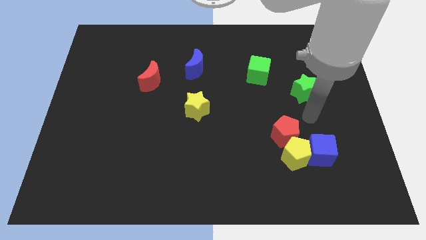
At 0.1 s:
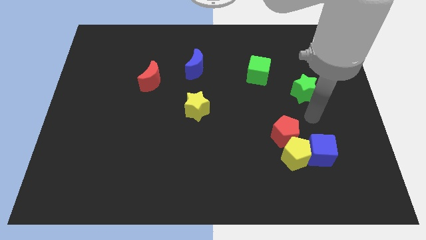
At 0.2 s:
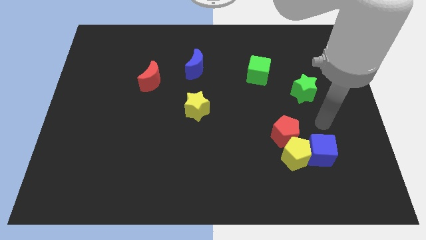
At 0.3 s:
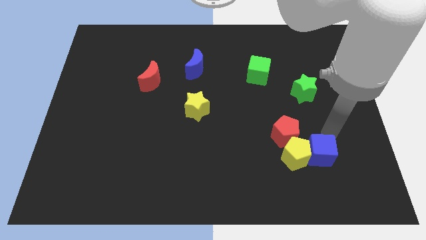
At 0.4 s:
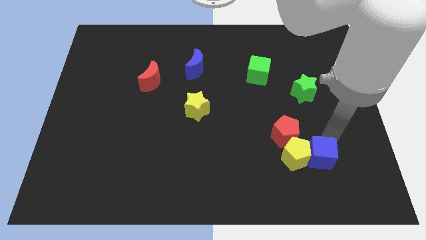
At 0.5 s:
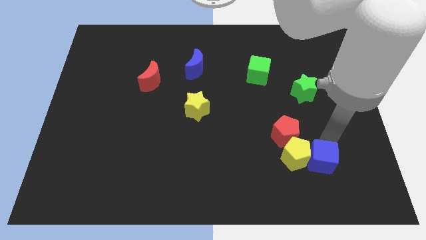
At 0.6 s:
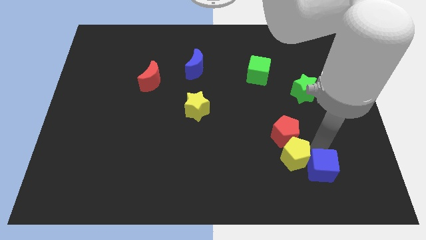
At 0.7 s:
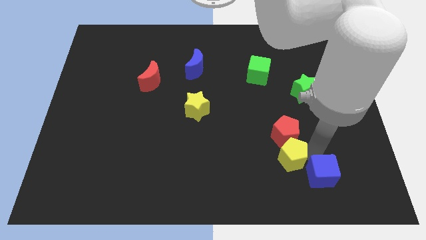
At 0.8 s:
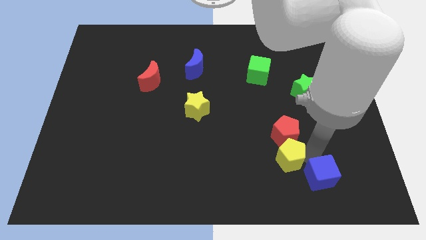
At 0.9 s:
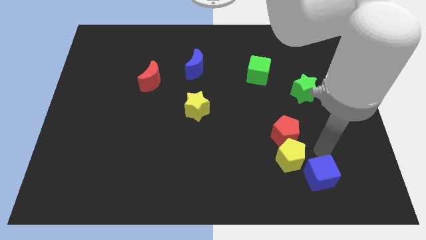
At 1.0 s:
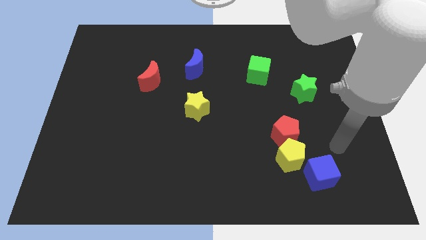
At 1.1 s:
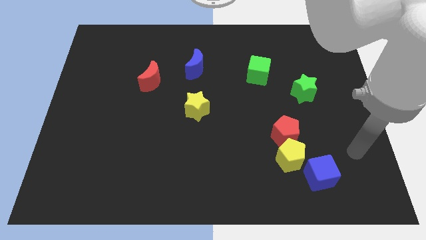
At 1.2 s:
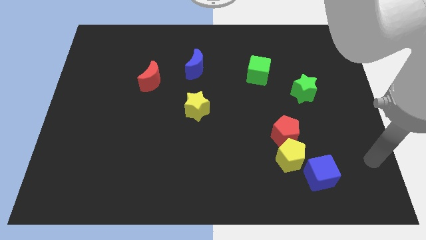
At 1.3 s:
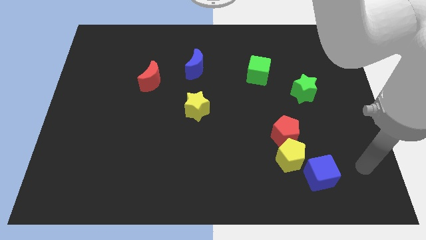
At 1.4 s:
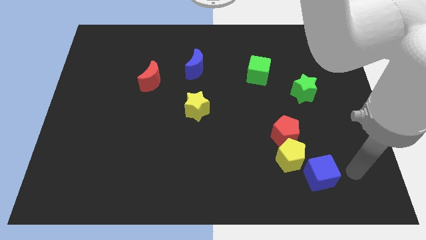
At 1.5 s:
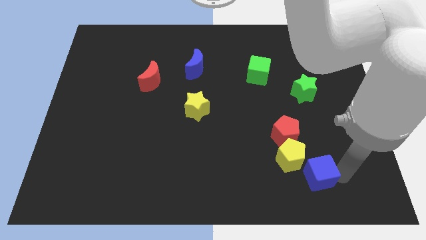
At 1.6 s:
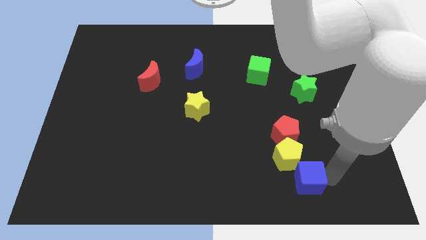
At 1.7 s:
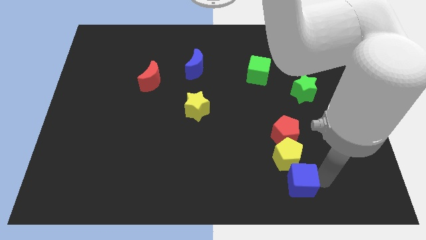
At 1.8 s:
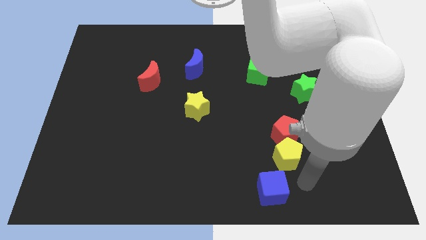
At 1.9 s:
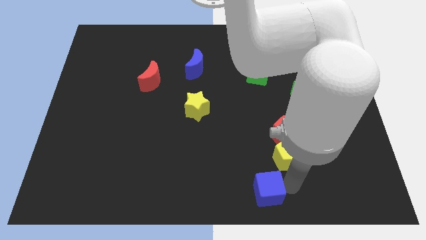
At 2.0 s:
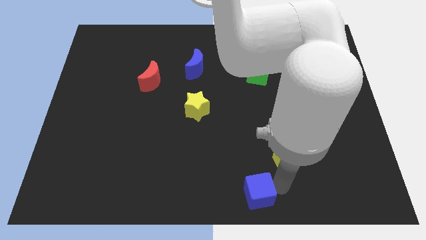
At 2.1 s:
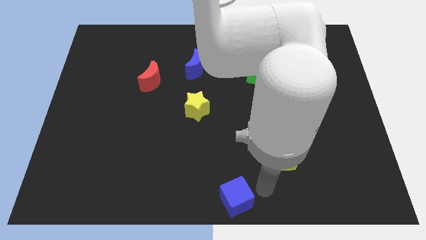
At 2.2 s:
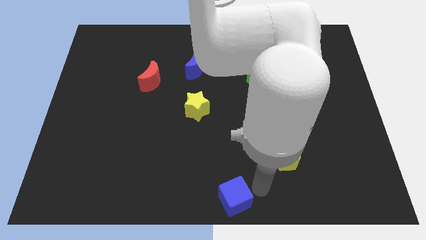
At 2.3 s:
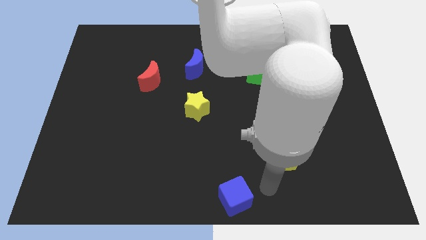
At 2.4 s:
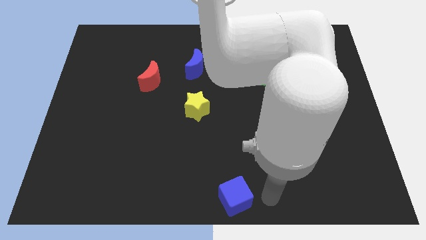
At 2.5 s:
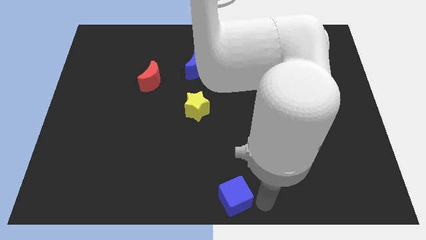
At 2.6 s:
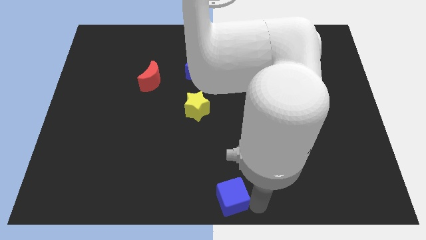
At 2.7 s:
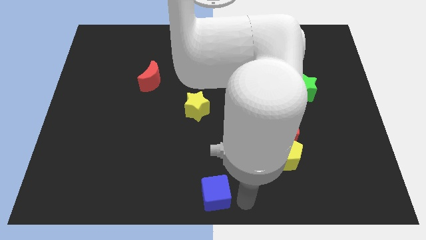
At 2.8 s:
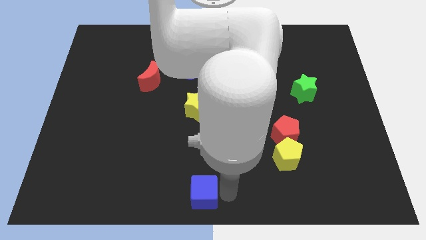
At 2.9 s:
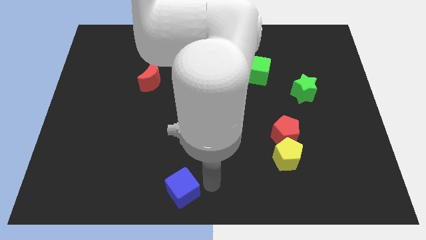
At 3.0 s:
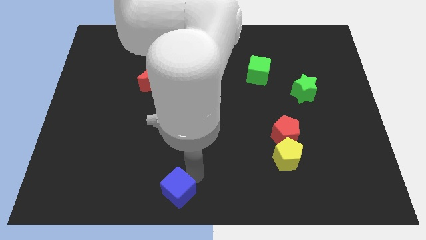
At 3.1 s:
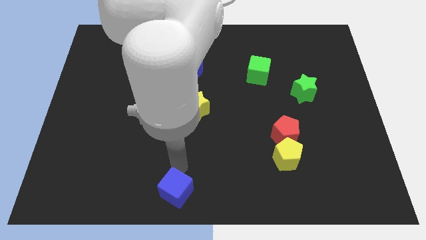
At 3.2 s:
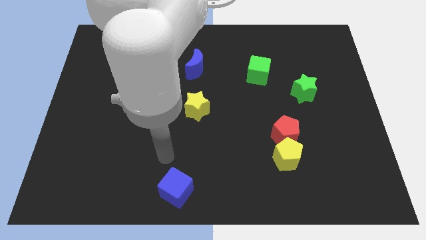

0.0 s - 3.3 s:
push the blue cube vertically below the yellow star

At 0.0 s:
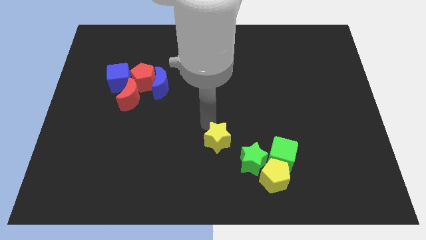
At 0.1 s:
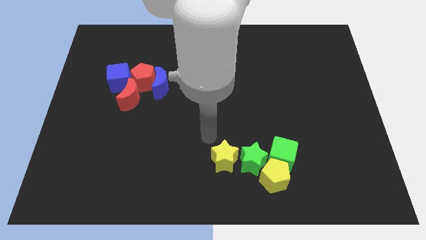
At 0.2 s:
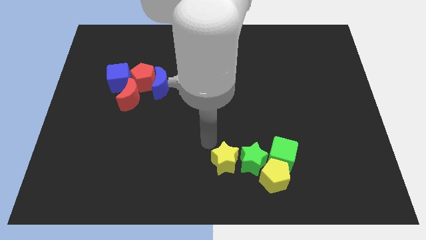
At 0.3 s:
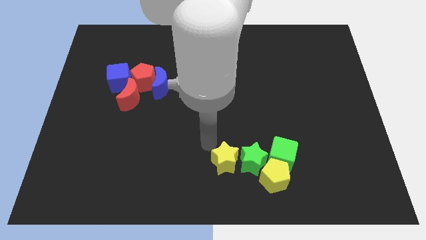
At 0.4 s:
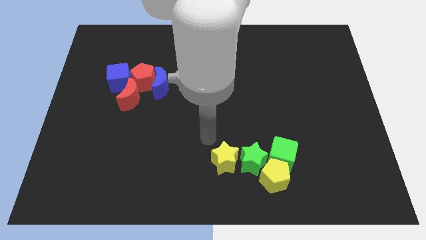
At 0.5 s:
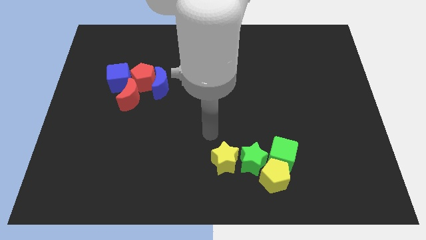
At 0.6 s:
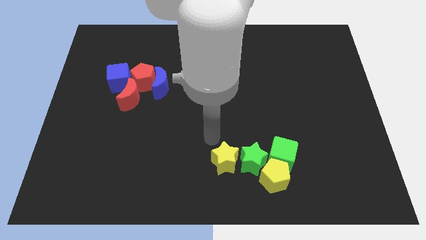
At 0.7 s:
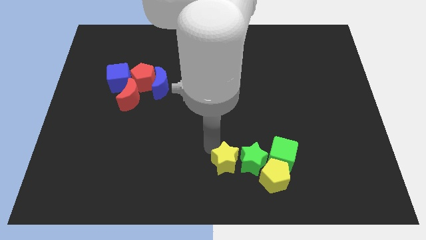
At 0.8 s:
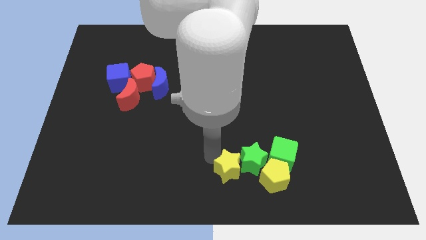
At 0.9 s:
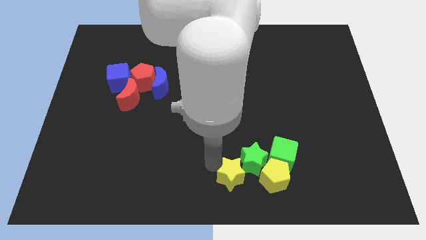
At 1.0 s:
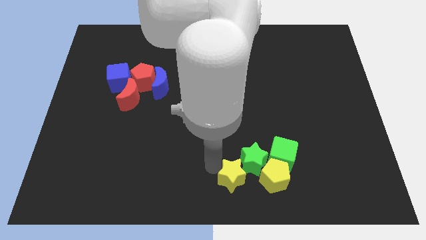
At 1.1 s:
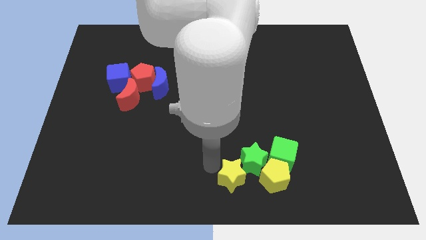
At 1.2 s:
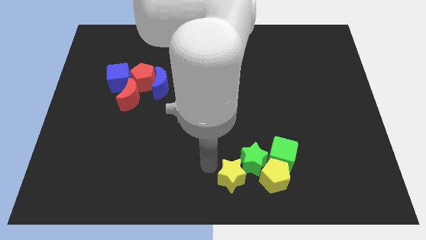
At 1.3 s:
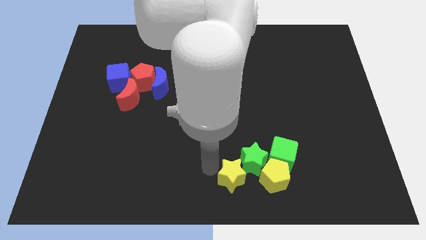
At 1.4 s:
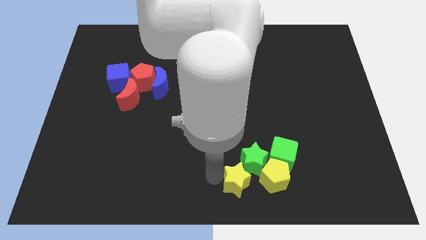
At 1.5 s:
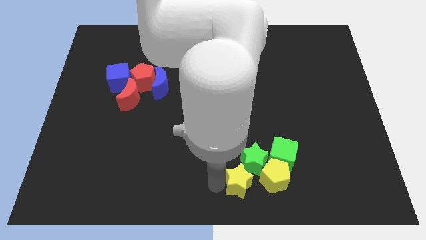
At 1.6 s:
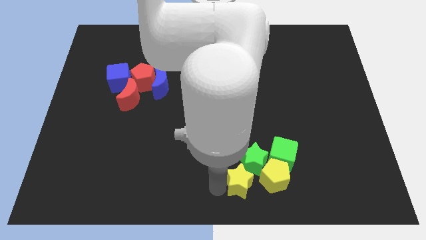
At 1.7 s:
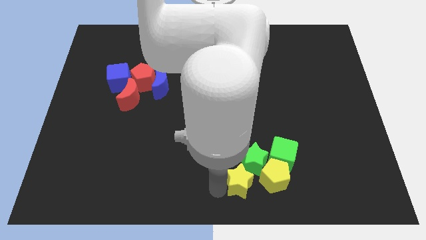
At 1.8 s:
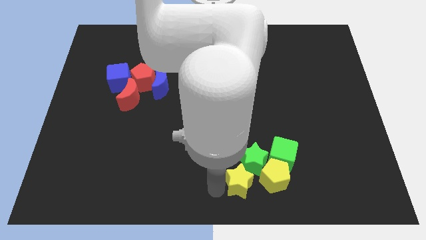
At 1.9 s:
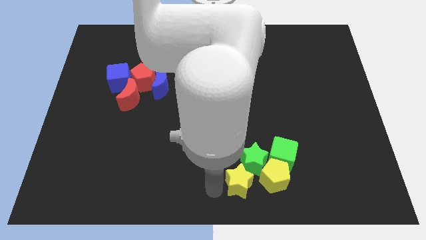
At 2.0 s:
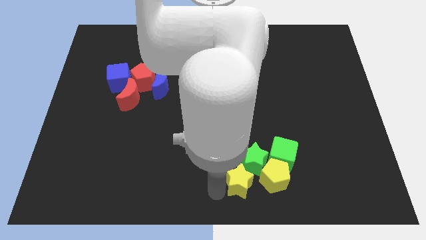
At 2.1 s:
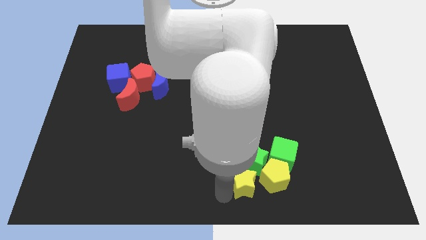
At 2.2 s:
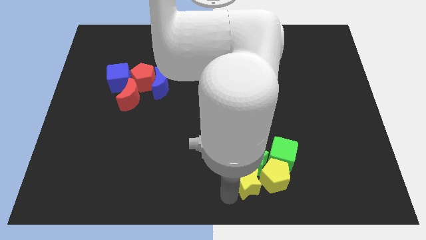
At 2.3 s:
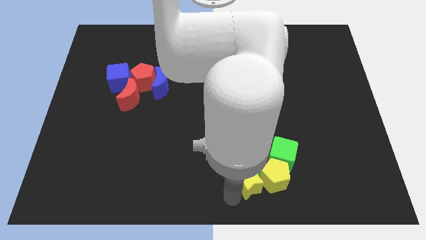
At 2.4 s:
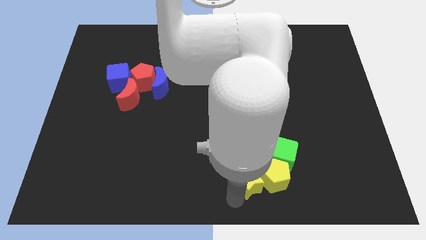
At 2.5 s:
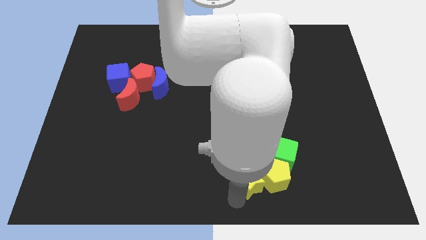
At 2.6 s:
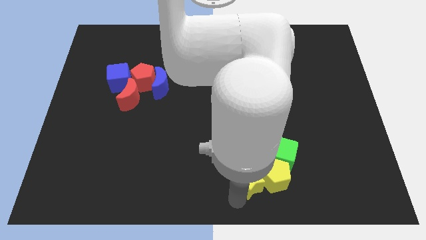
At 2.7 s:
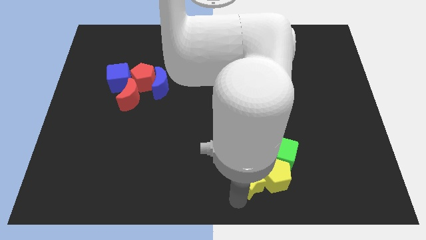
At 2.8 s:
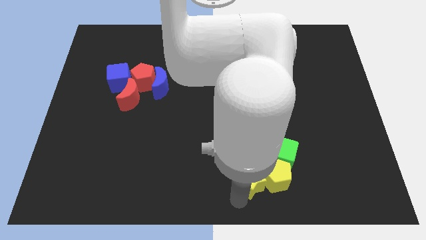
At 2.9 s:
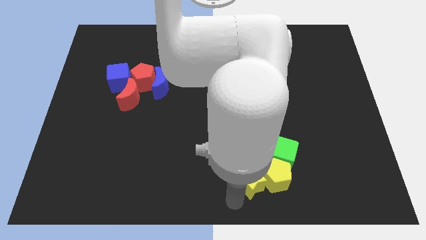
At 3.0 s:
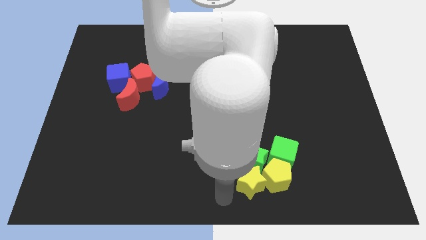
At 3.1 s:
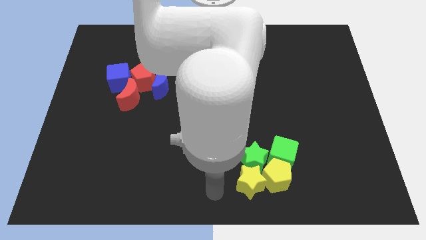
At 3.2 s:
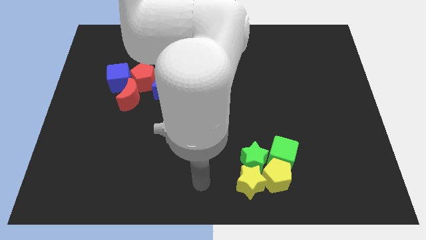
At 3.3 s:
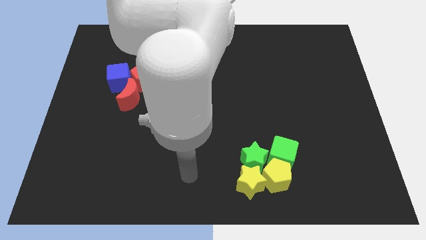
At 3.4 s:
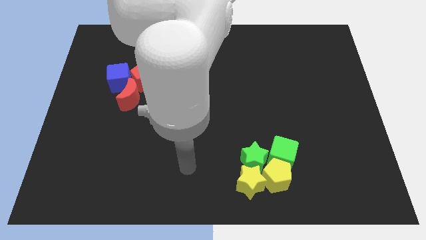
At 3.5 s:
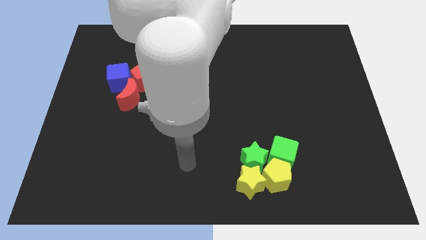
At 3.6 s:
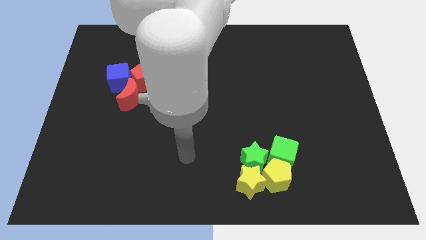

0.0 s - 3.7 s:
move the yellow star down to the green star

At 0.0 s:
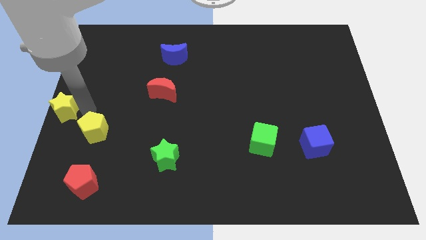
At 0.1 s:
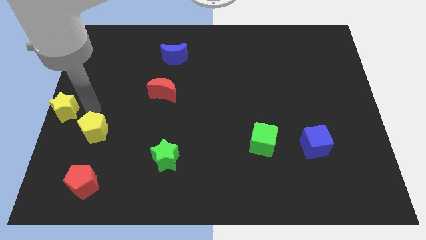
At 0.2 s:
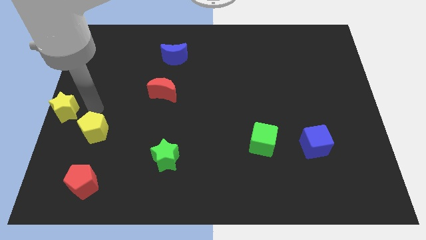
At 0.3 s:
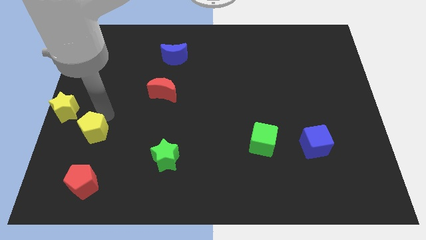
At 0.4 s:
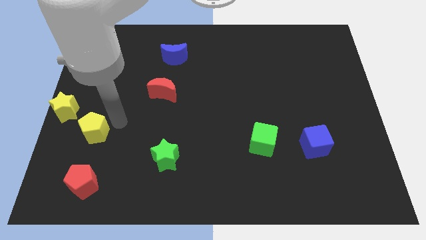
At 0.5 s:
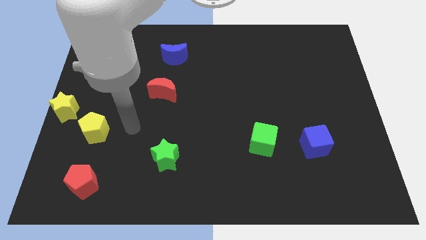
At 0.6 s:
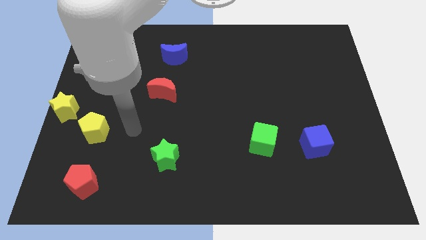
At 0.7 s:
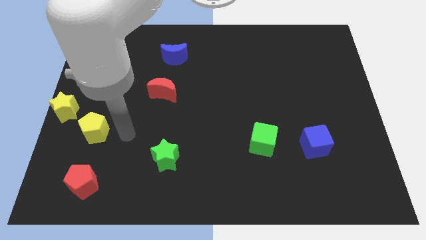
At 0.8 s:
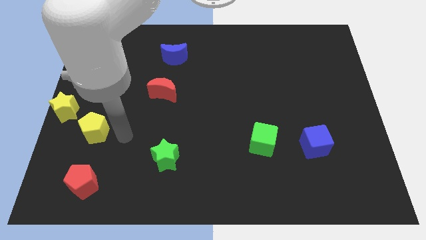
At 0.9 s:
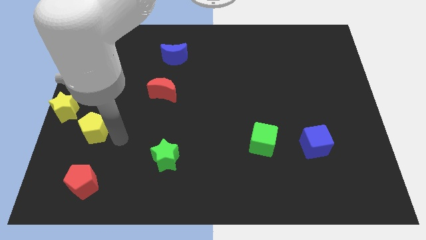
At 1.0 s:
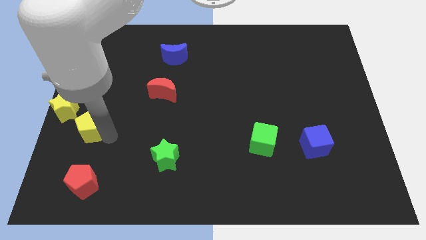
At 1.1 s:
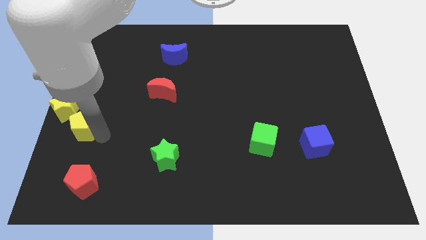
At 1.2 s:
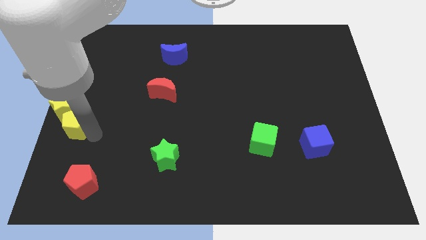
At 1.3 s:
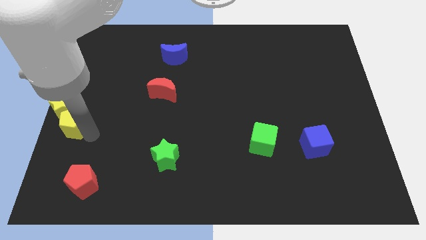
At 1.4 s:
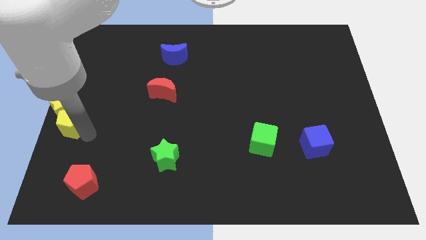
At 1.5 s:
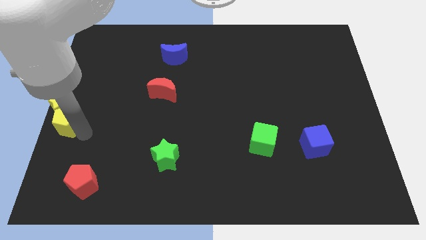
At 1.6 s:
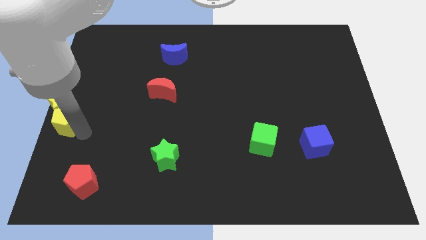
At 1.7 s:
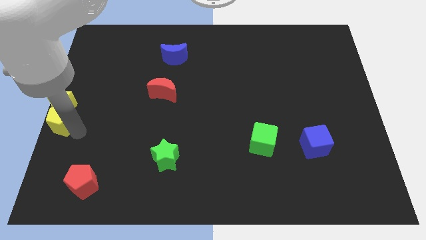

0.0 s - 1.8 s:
move the yellow pentagon below the yellow star

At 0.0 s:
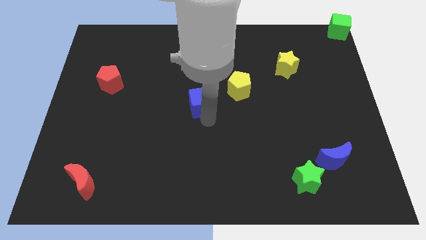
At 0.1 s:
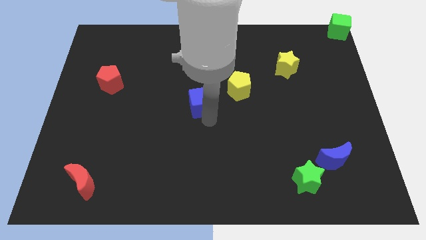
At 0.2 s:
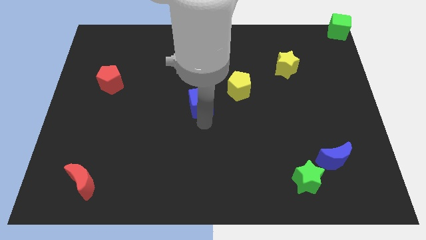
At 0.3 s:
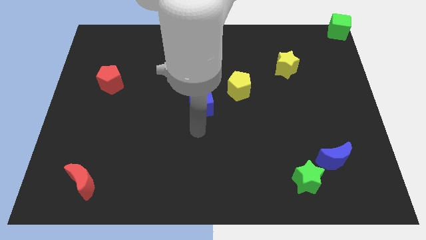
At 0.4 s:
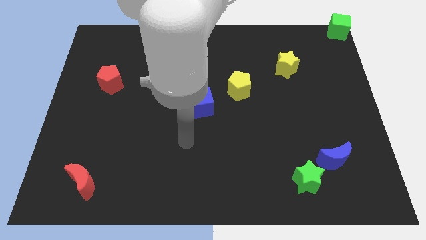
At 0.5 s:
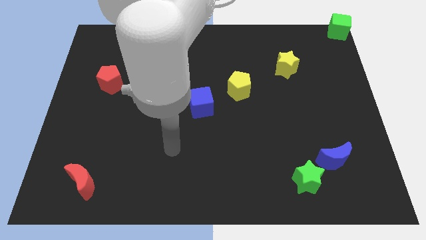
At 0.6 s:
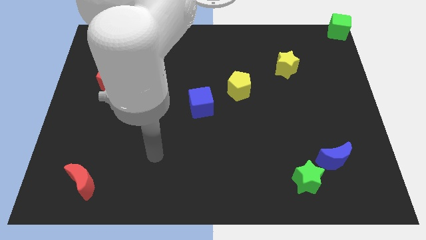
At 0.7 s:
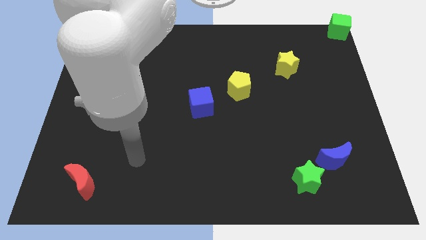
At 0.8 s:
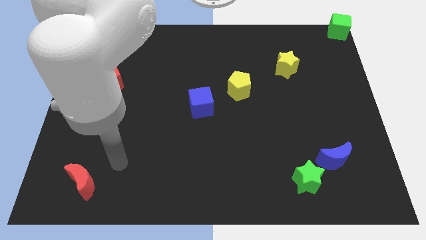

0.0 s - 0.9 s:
move the arm away from the blue cube
